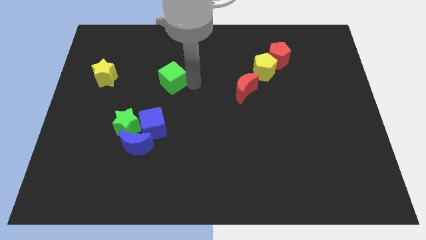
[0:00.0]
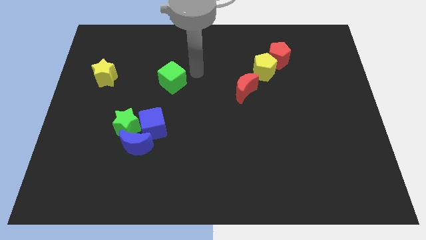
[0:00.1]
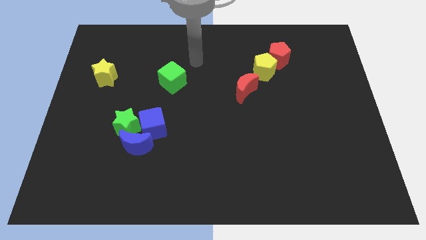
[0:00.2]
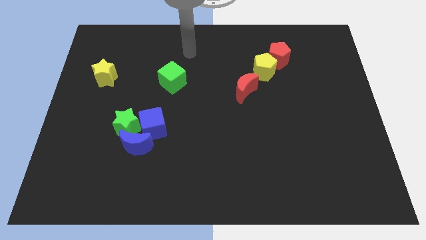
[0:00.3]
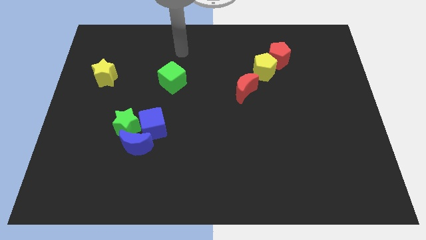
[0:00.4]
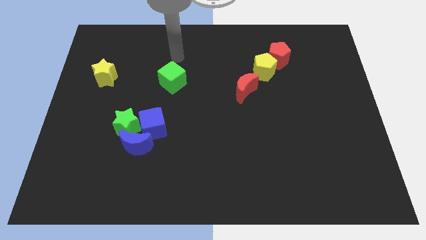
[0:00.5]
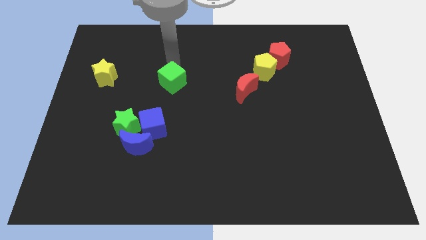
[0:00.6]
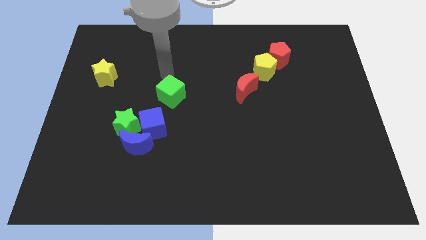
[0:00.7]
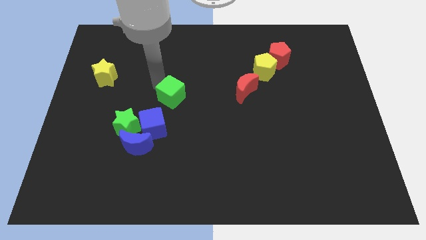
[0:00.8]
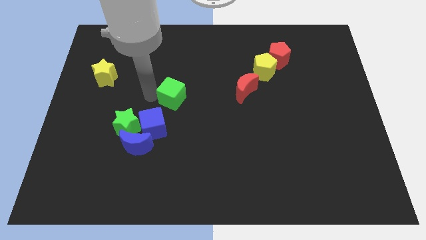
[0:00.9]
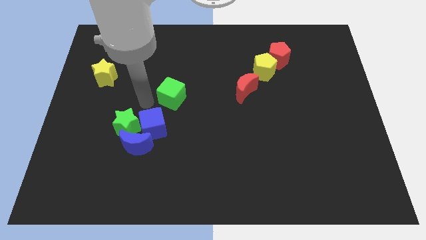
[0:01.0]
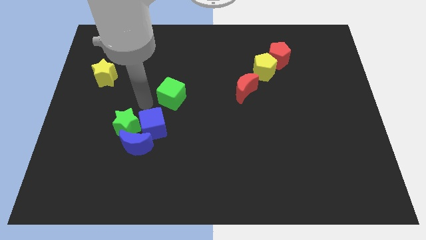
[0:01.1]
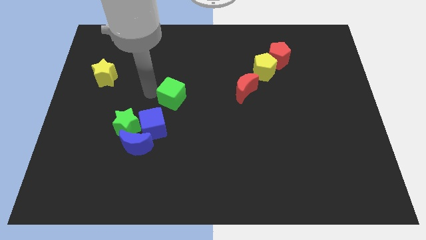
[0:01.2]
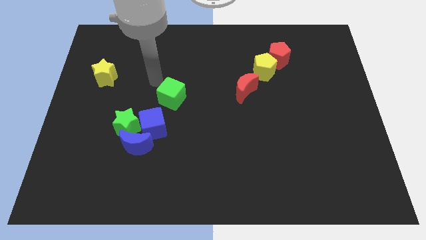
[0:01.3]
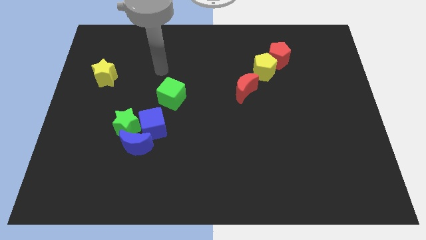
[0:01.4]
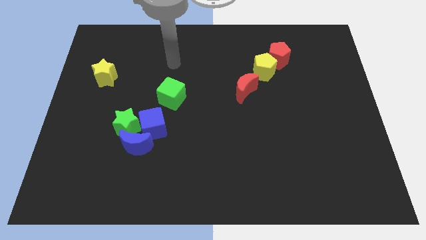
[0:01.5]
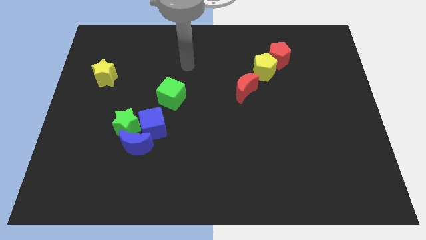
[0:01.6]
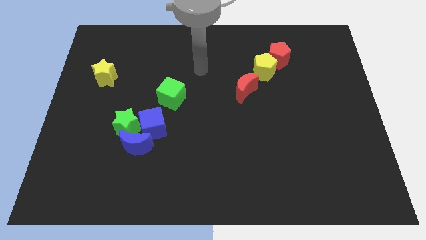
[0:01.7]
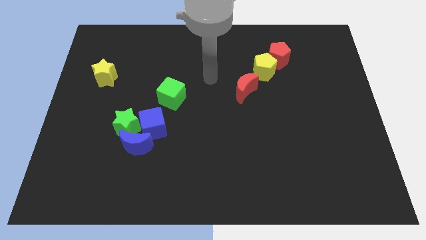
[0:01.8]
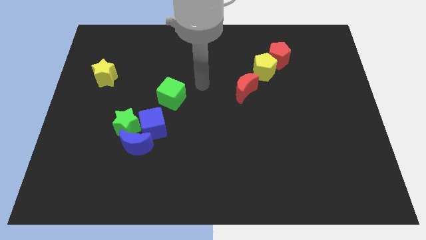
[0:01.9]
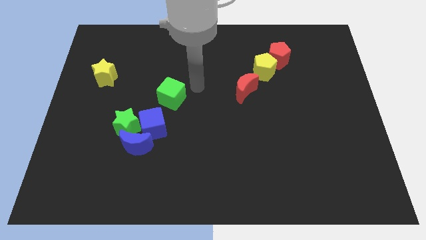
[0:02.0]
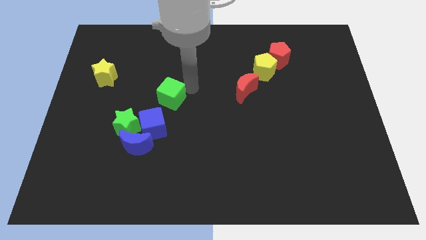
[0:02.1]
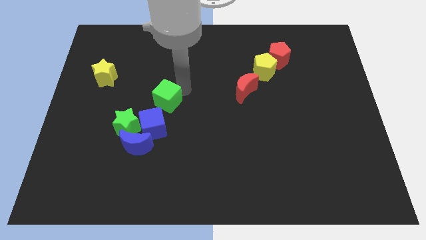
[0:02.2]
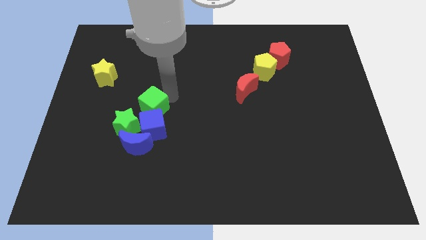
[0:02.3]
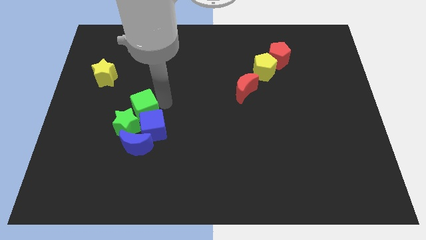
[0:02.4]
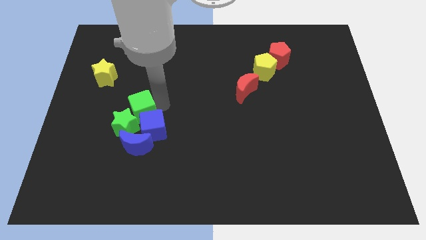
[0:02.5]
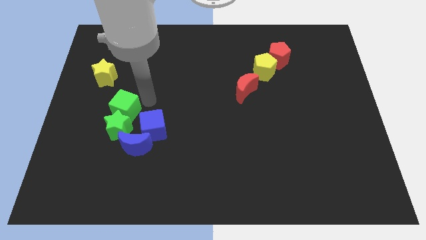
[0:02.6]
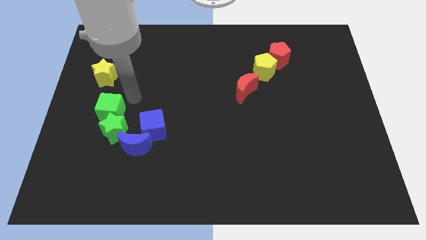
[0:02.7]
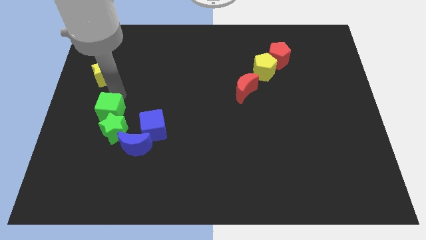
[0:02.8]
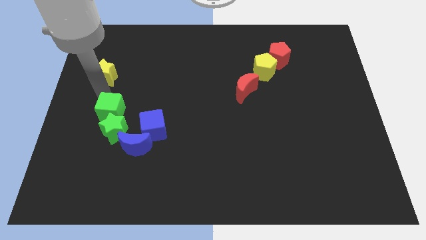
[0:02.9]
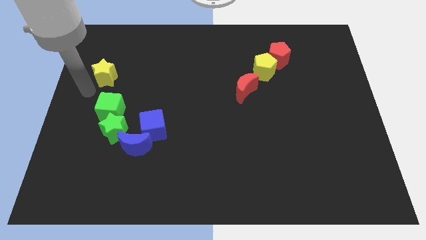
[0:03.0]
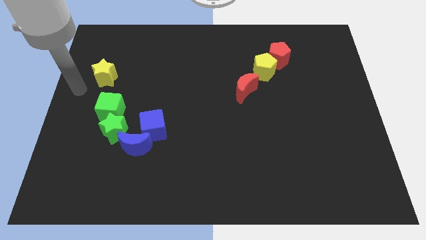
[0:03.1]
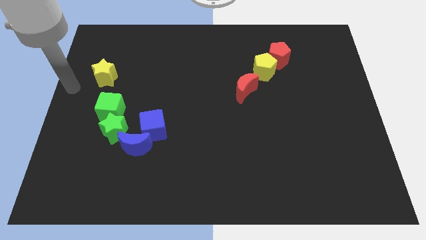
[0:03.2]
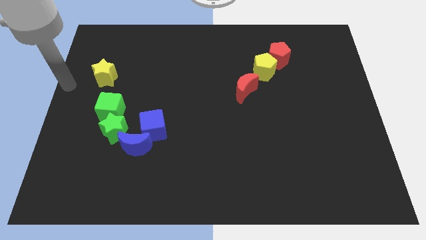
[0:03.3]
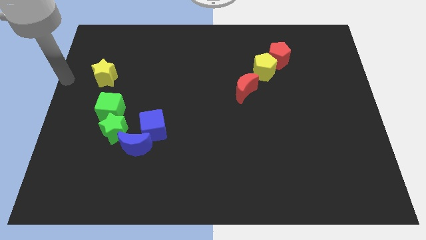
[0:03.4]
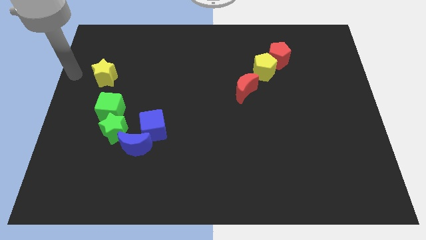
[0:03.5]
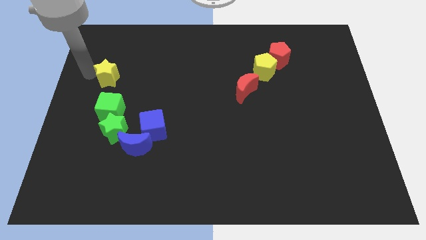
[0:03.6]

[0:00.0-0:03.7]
move the green cube vertically above the green star

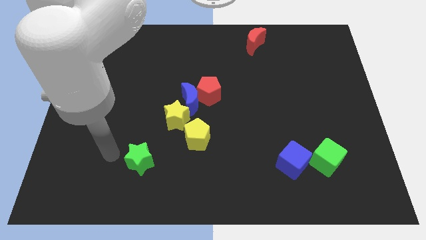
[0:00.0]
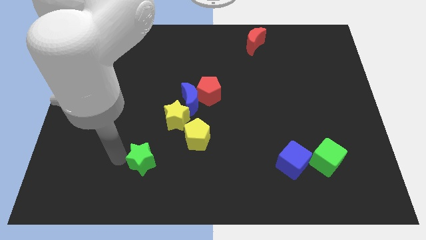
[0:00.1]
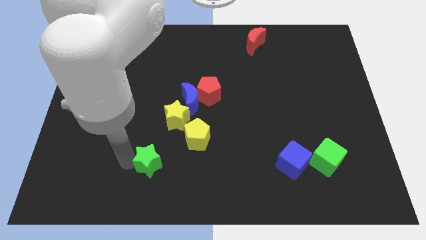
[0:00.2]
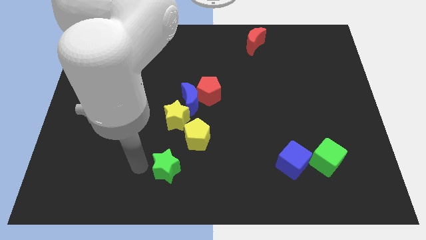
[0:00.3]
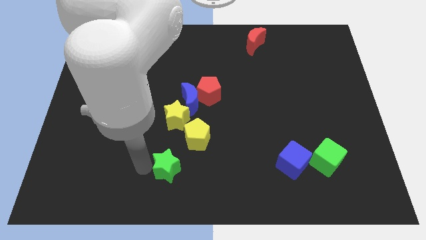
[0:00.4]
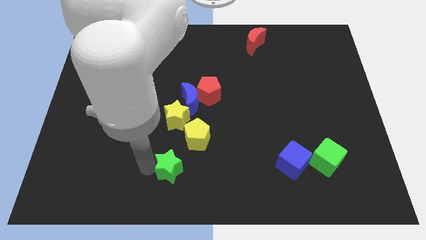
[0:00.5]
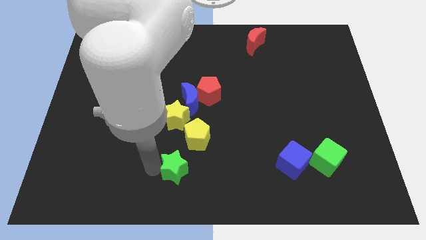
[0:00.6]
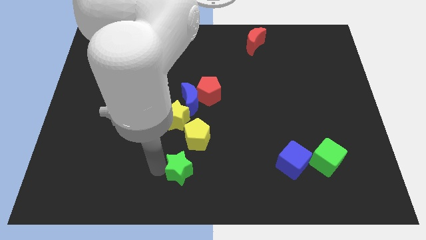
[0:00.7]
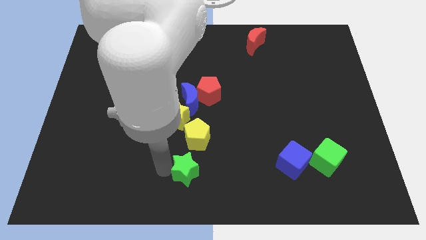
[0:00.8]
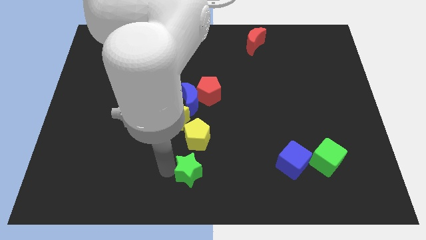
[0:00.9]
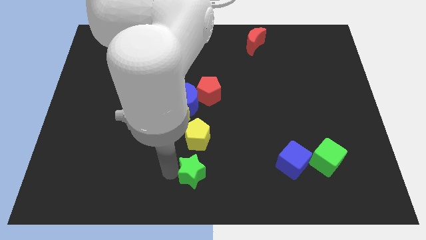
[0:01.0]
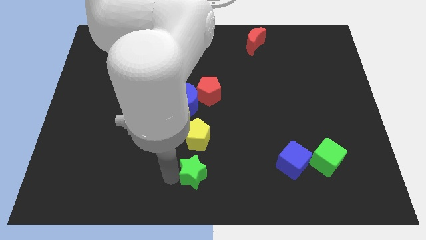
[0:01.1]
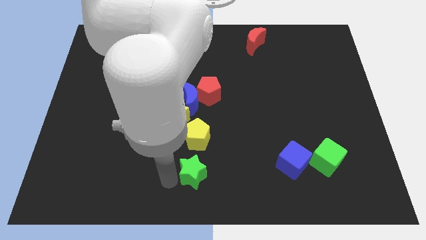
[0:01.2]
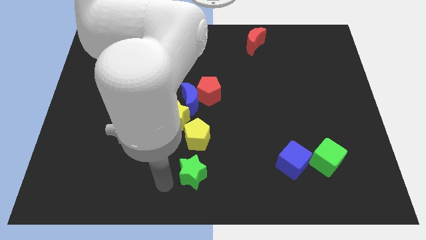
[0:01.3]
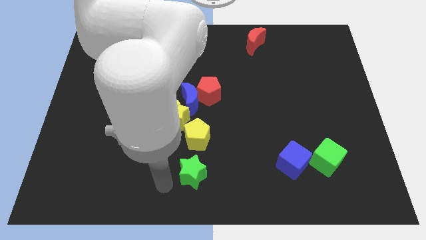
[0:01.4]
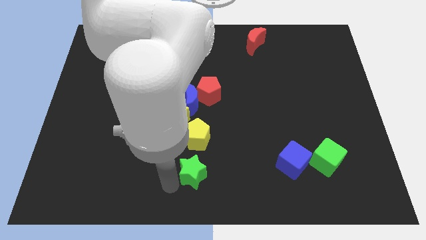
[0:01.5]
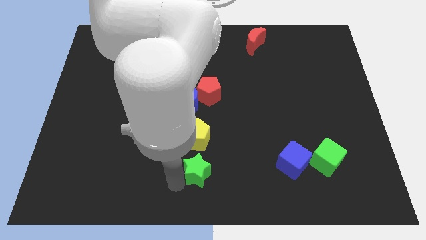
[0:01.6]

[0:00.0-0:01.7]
push the green star to the bottom of the yellow pentagon

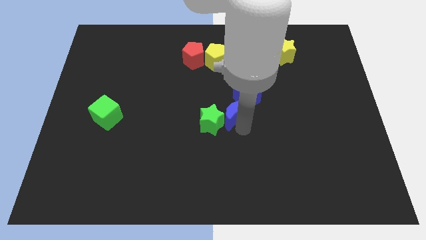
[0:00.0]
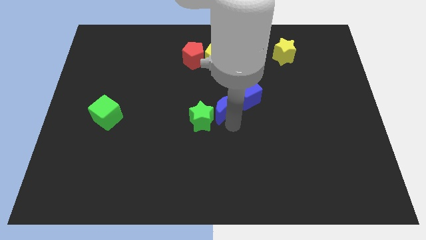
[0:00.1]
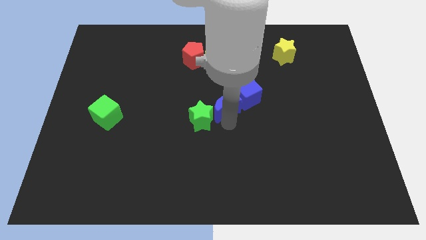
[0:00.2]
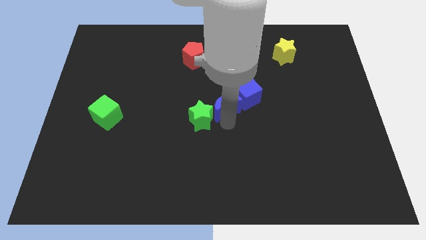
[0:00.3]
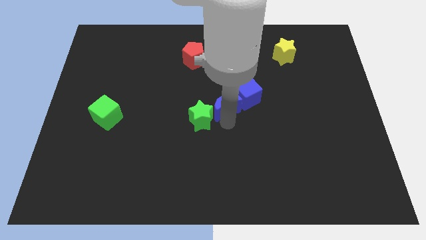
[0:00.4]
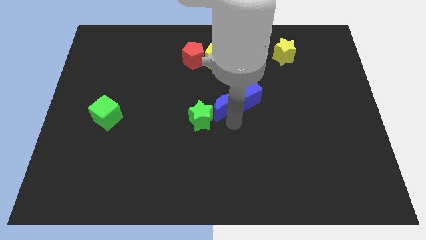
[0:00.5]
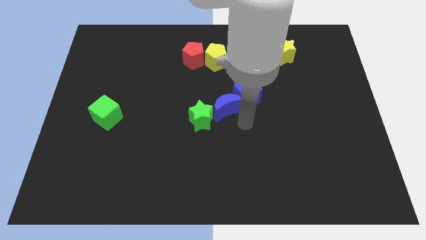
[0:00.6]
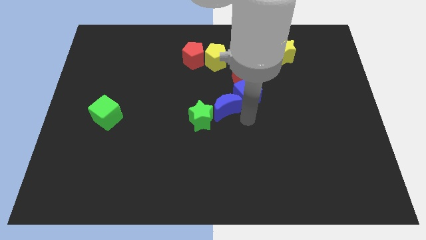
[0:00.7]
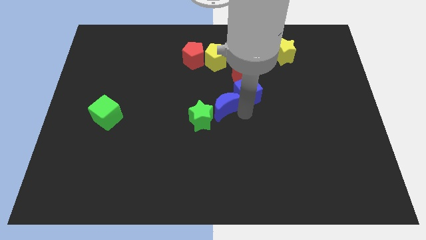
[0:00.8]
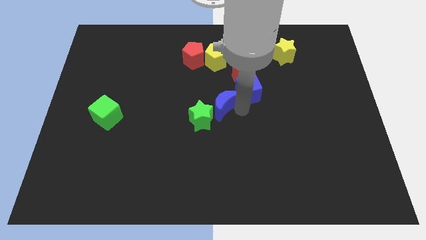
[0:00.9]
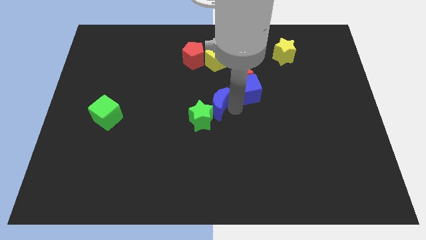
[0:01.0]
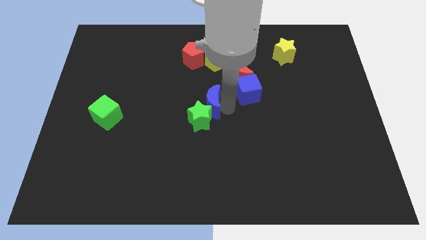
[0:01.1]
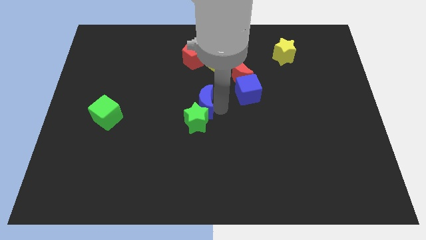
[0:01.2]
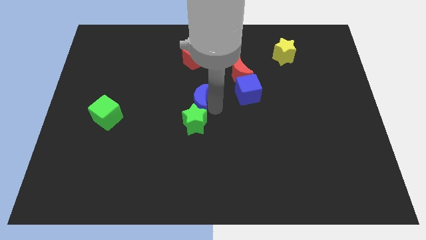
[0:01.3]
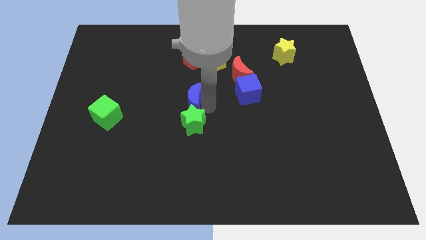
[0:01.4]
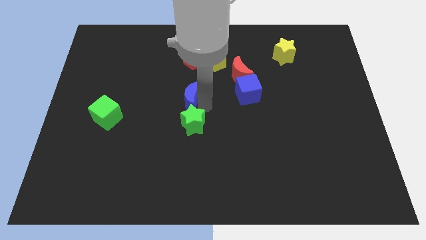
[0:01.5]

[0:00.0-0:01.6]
move the blue crescent to the top side of the green star

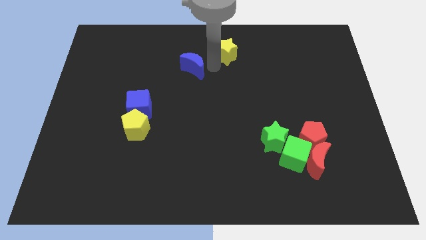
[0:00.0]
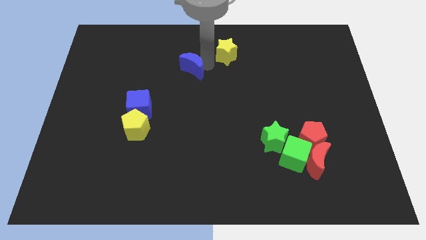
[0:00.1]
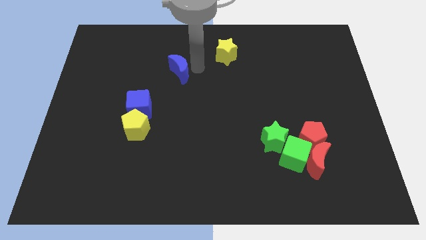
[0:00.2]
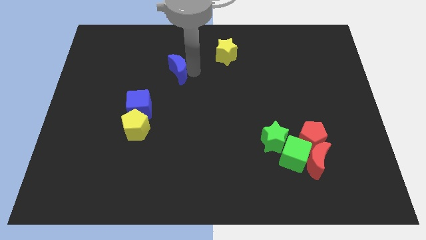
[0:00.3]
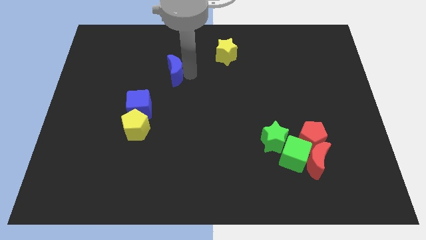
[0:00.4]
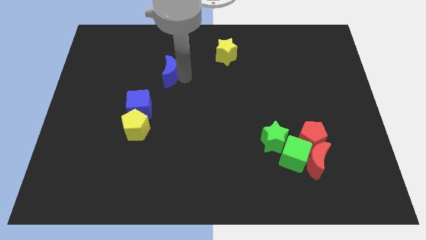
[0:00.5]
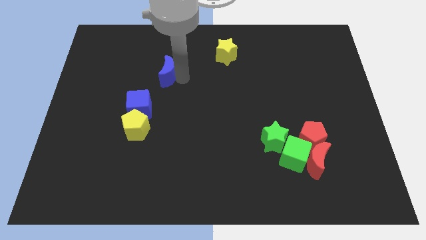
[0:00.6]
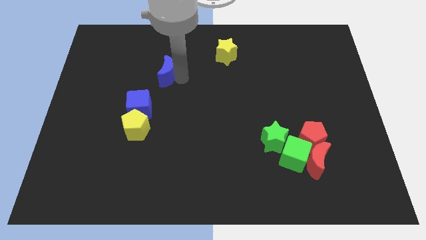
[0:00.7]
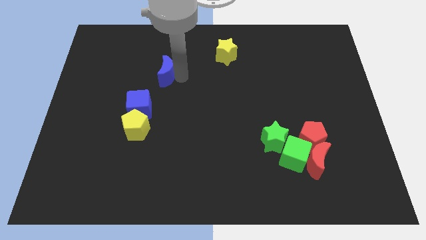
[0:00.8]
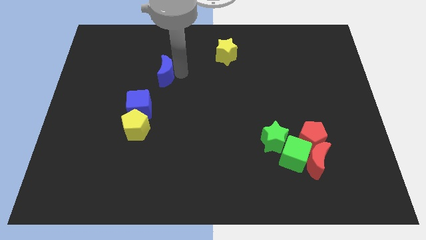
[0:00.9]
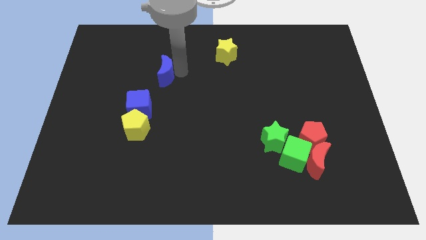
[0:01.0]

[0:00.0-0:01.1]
place the blue moon diagonally to the right of the blue cube

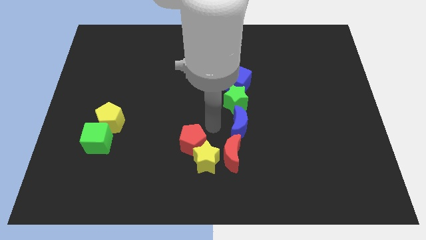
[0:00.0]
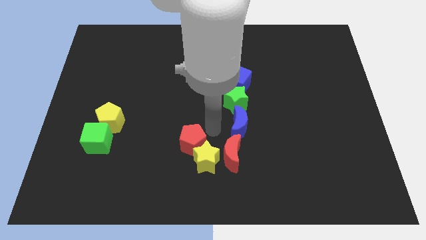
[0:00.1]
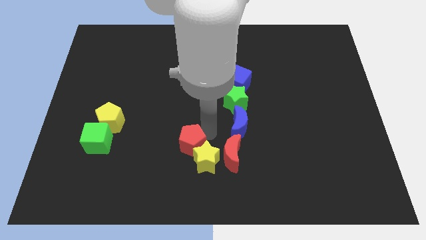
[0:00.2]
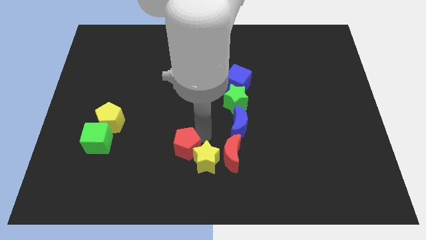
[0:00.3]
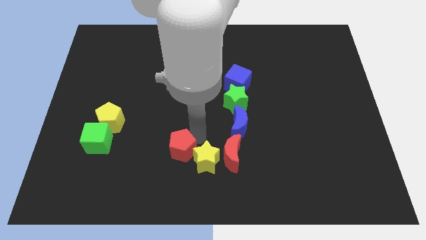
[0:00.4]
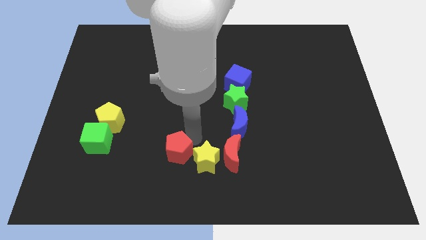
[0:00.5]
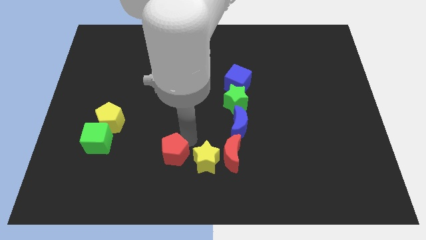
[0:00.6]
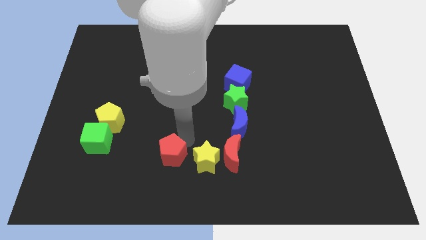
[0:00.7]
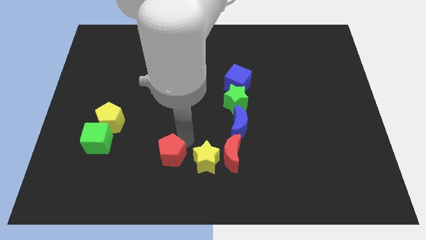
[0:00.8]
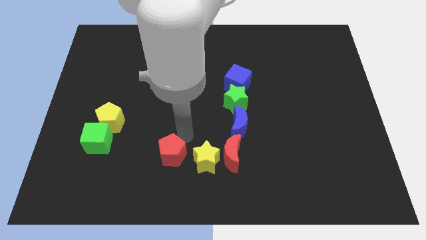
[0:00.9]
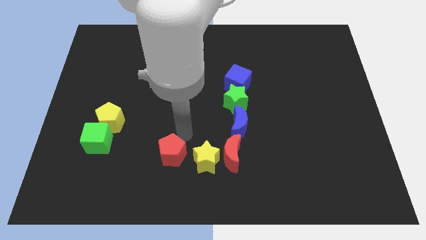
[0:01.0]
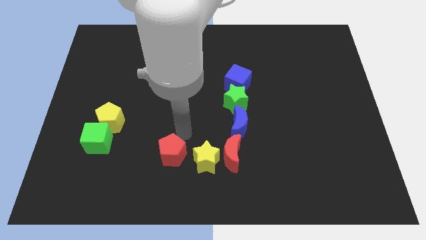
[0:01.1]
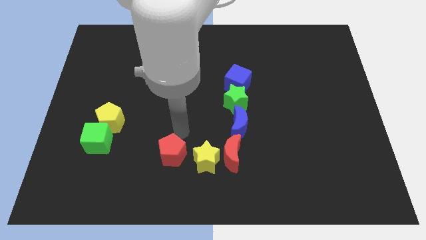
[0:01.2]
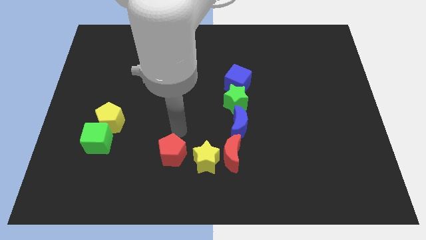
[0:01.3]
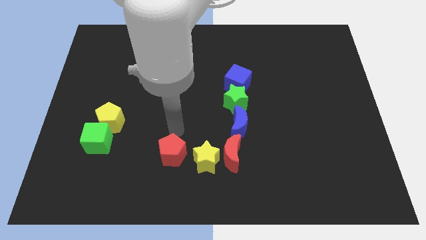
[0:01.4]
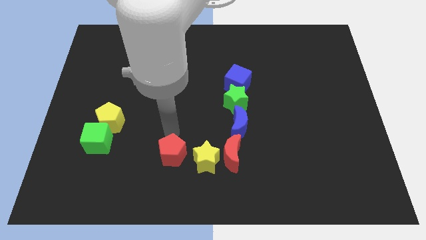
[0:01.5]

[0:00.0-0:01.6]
move the red pentagon to the left of the yellow star
